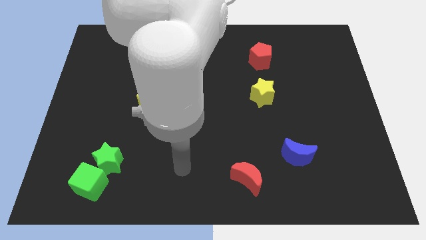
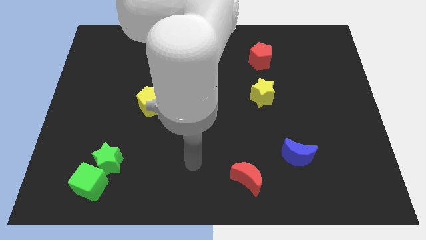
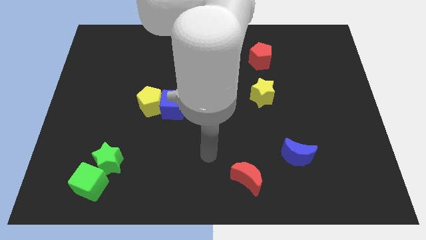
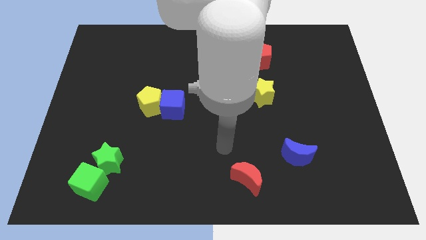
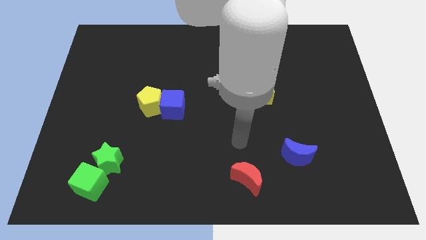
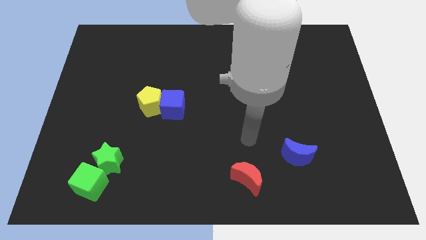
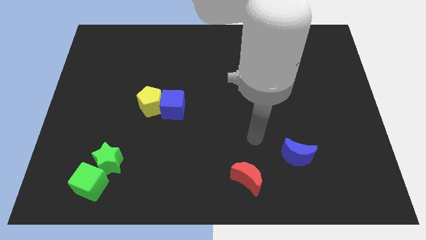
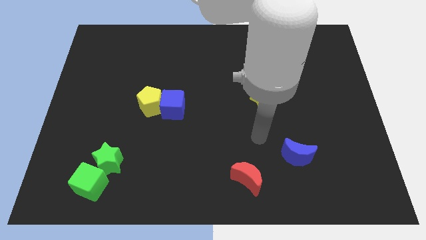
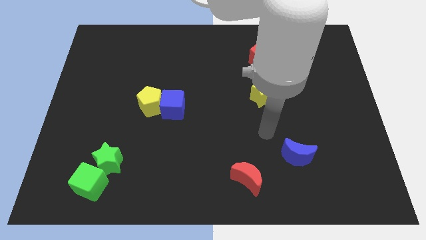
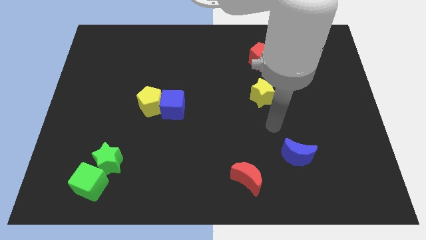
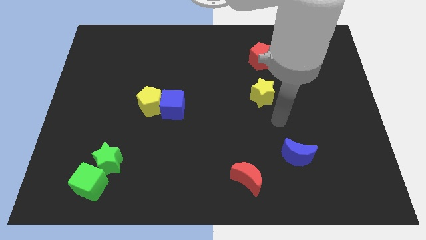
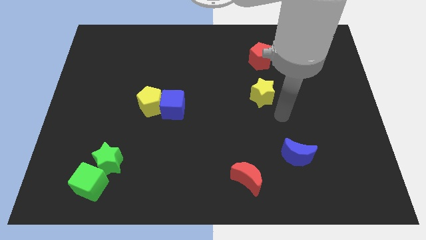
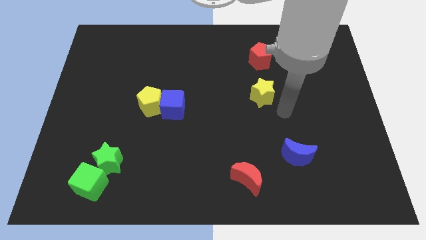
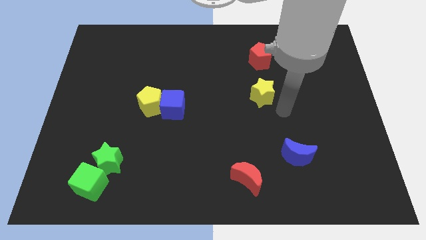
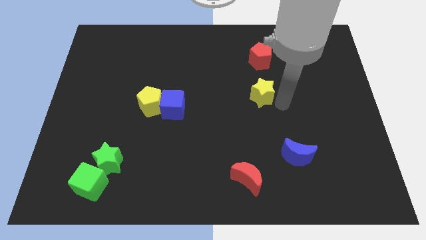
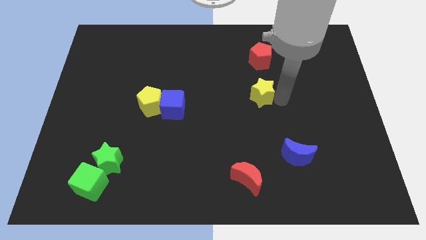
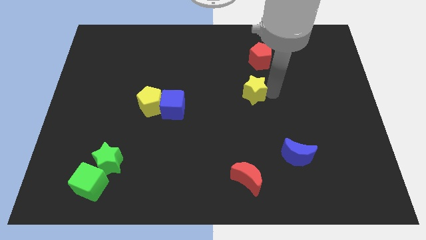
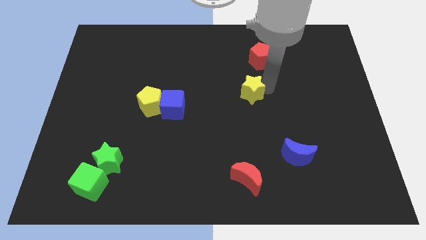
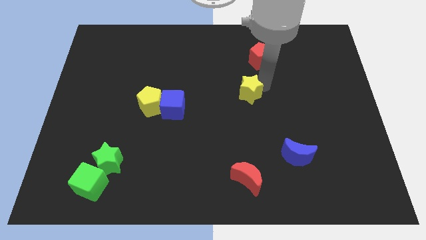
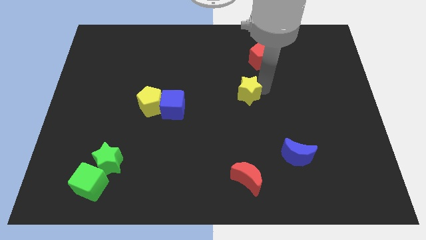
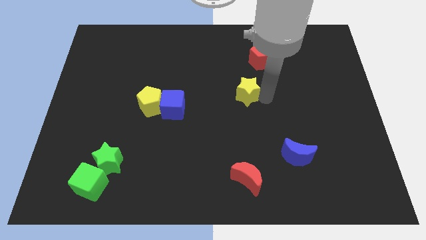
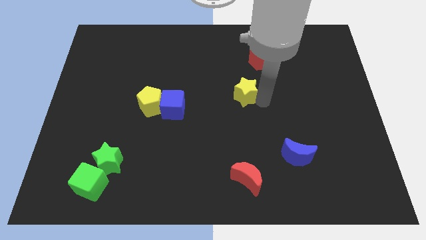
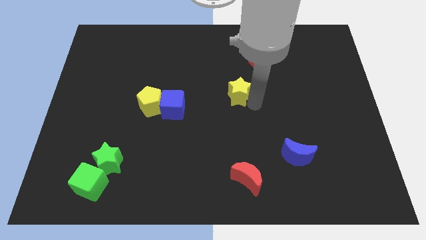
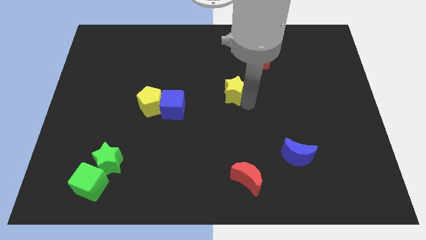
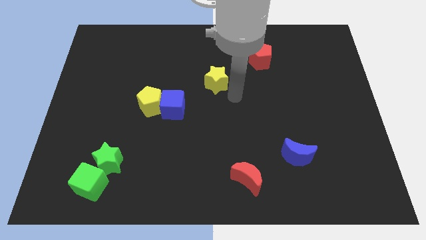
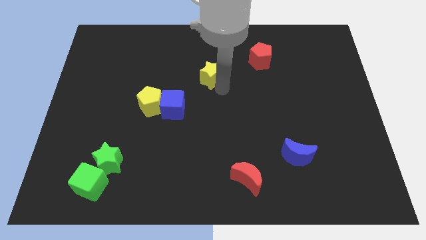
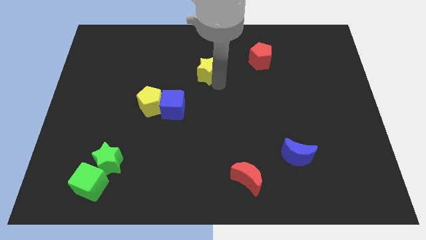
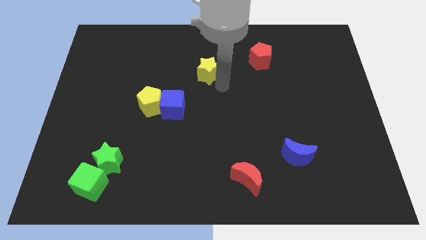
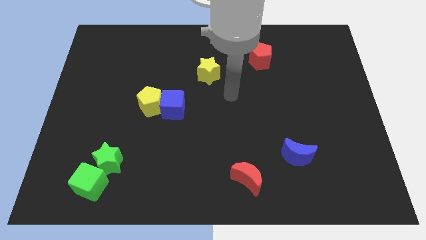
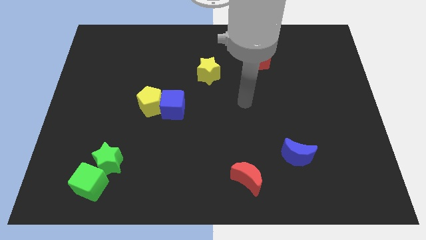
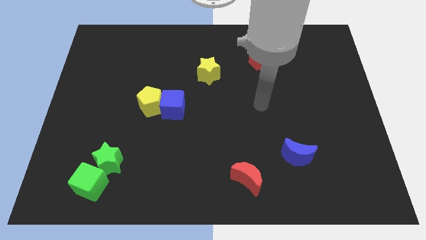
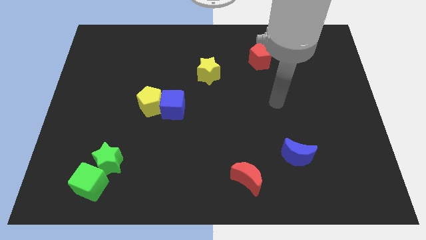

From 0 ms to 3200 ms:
drag the yellow star top right of the blue cube

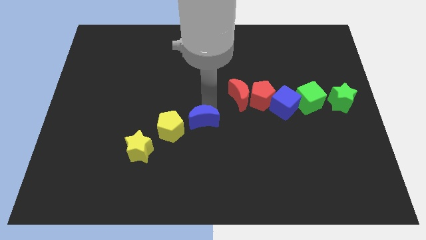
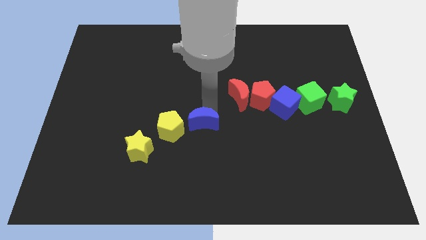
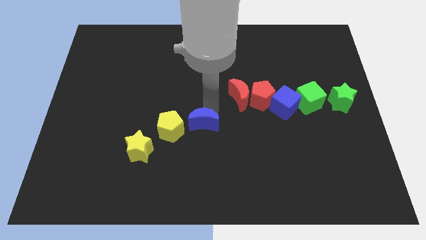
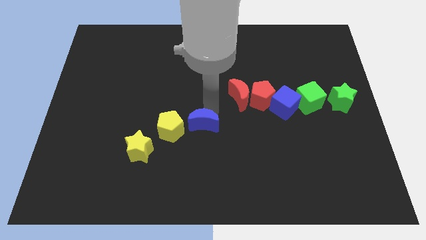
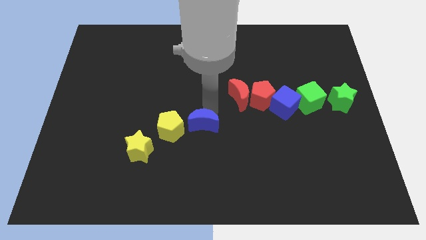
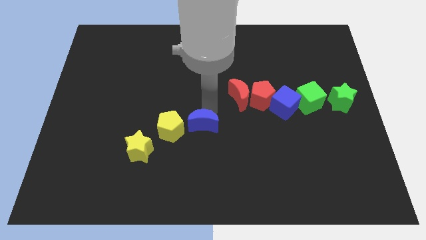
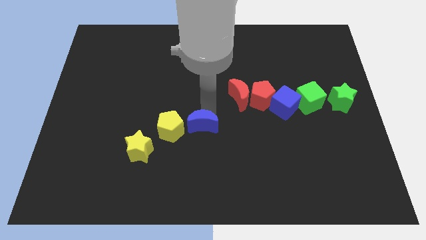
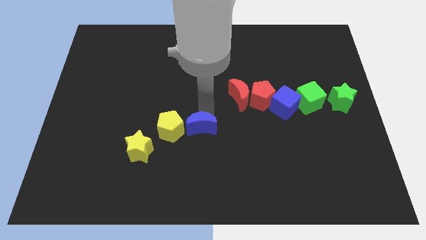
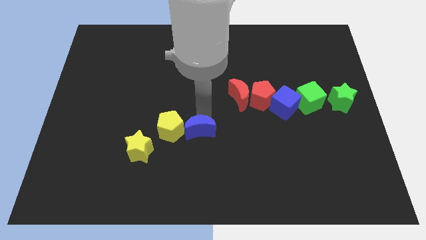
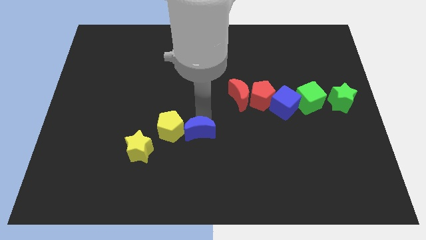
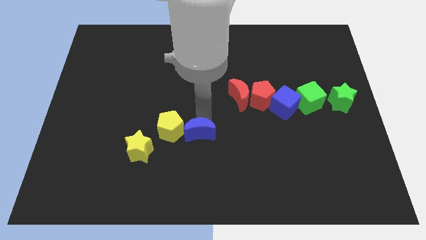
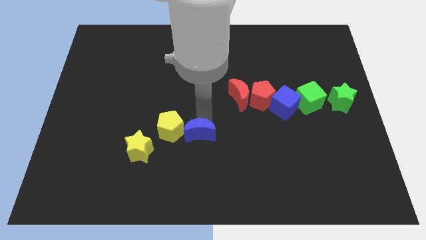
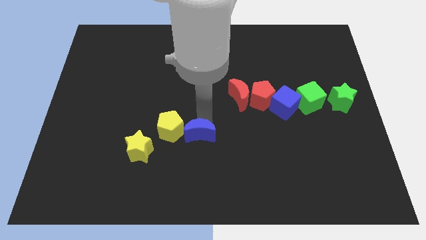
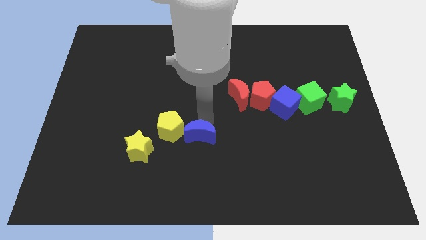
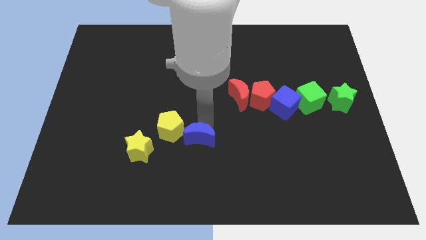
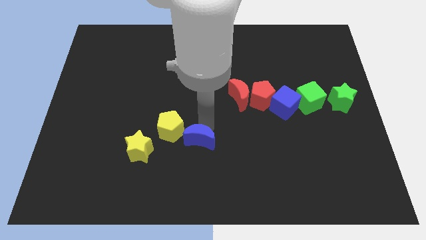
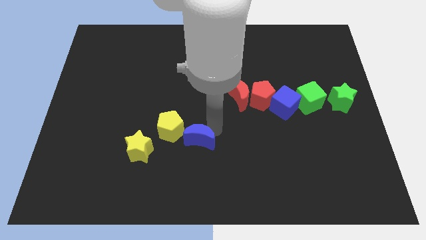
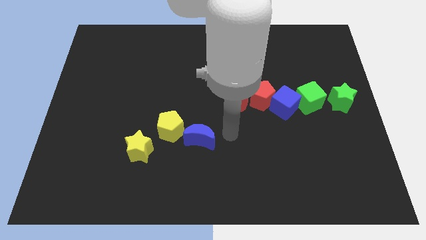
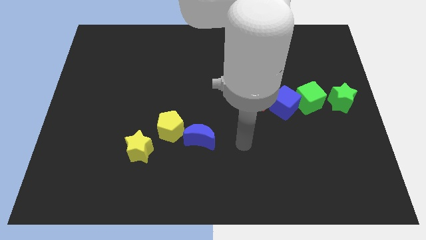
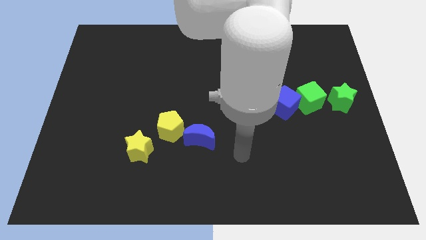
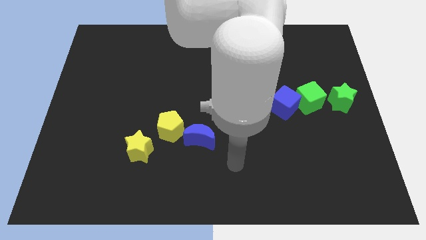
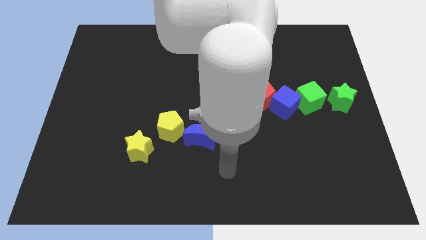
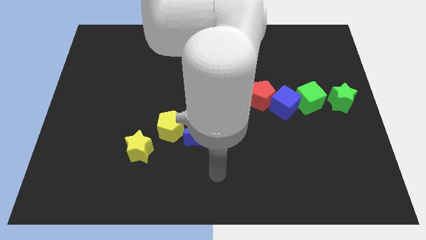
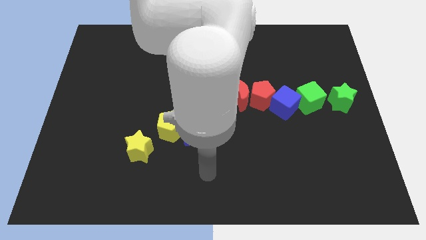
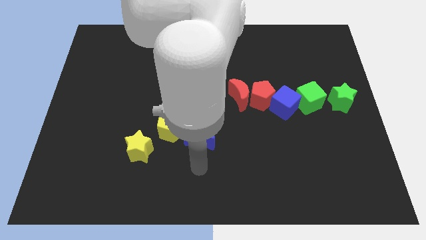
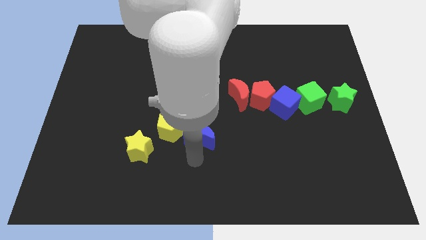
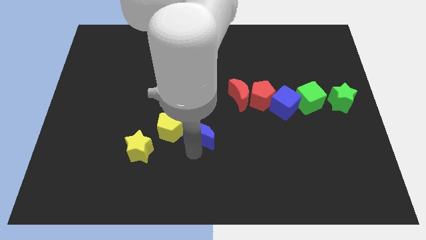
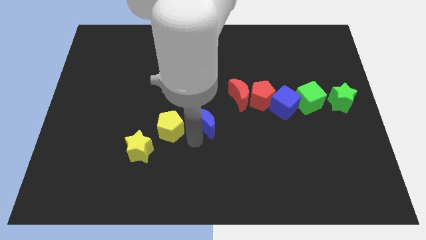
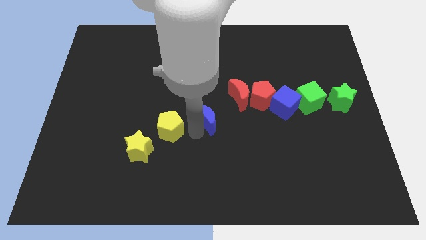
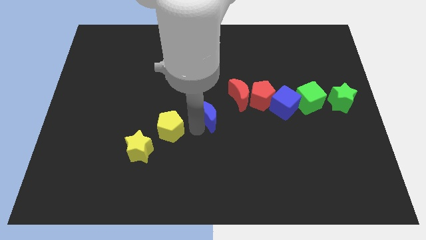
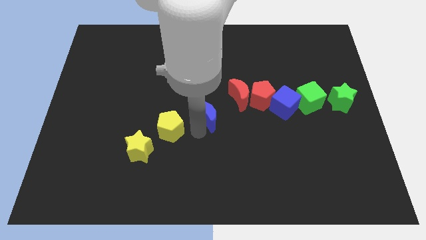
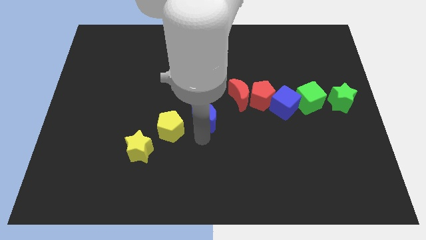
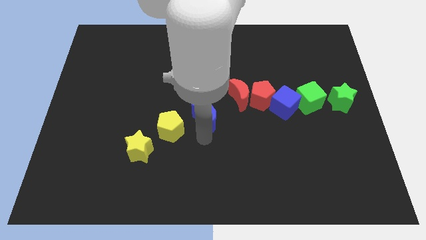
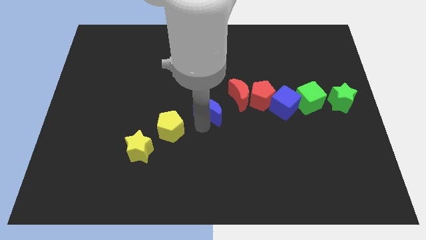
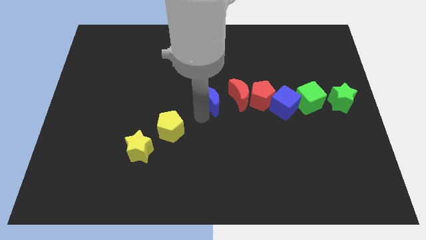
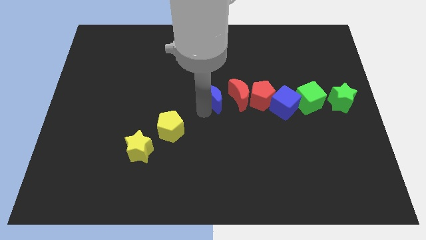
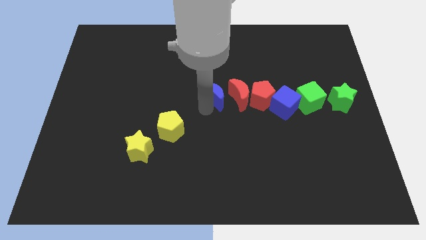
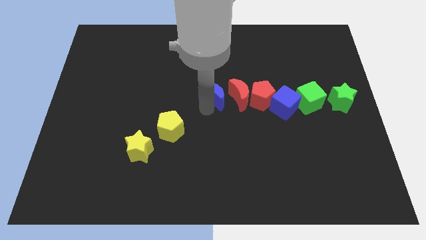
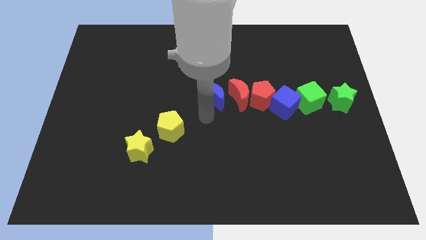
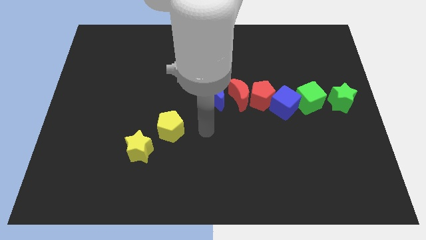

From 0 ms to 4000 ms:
move the blue moon to the center

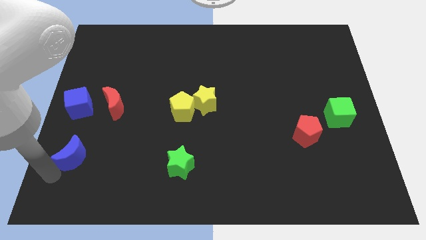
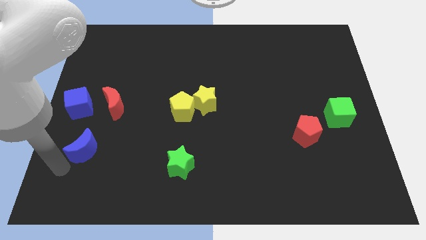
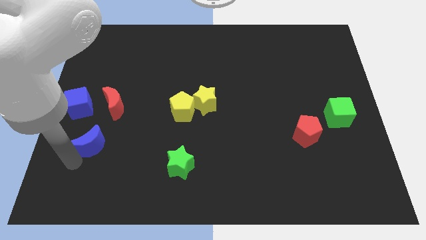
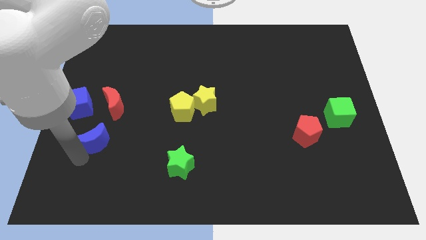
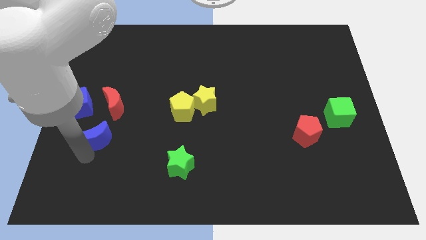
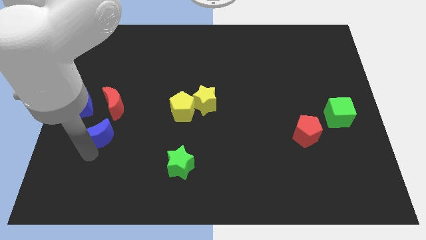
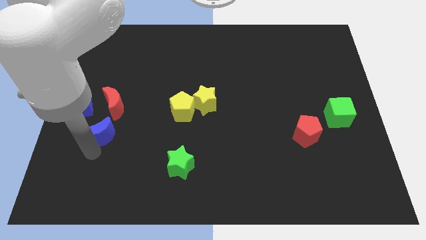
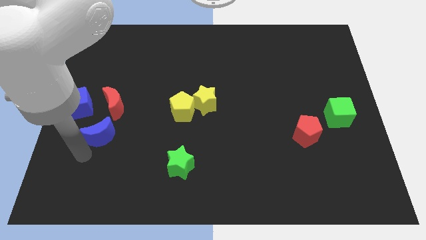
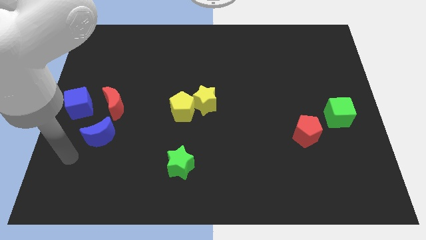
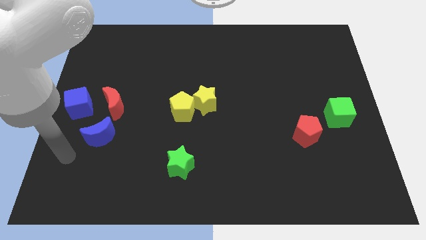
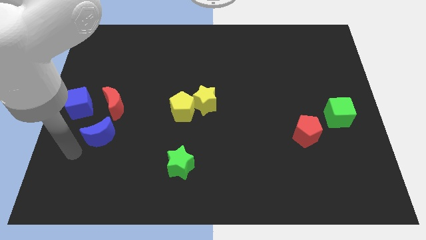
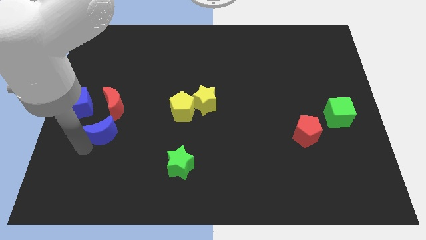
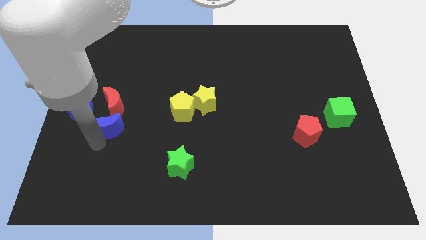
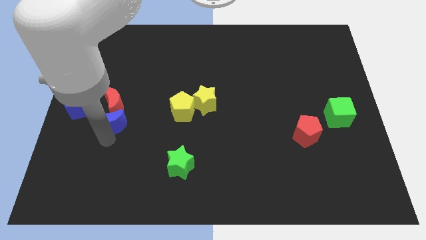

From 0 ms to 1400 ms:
push the blue crescent towards the red crescent

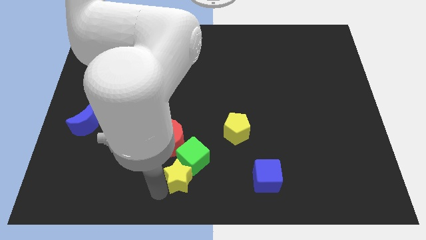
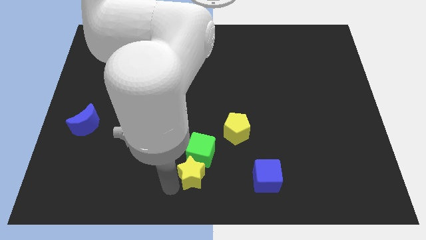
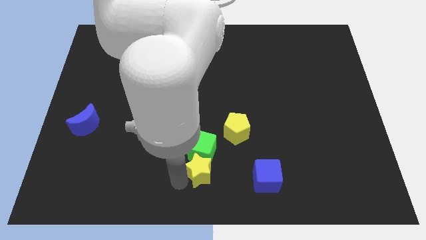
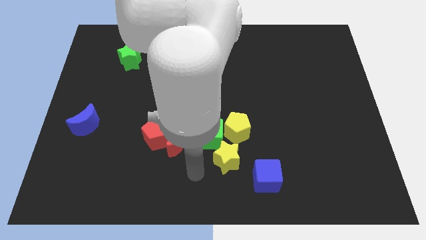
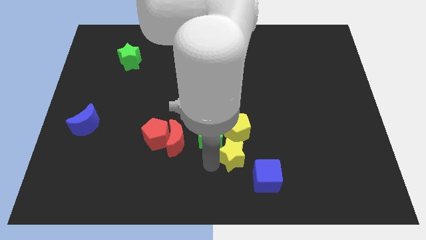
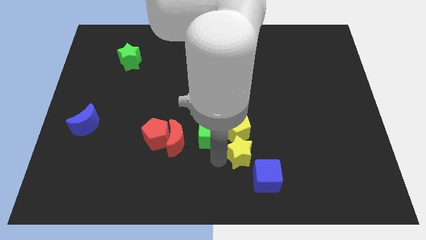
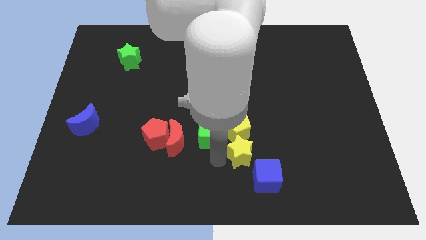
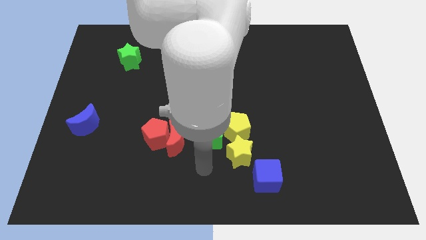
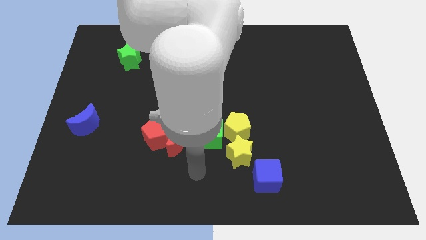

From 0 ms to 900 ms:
push the yellow star to the bottom side of the yellow pentagon
